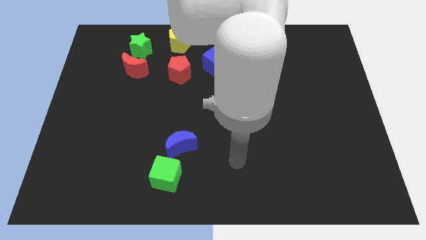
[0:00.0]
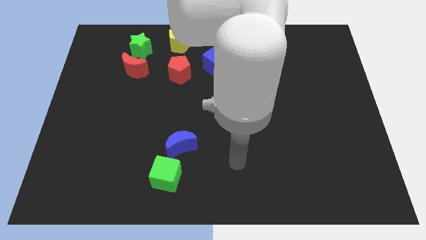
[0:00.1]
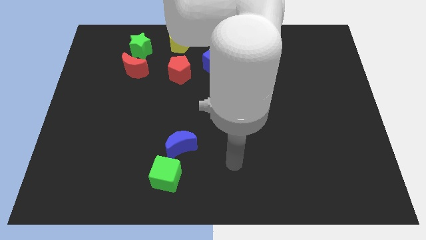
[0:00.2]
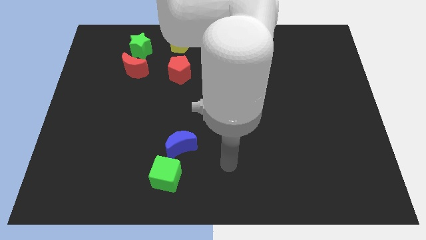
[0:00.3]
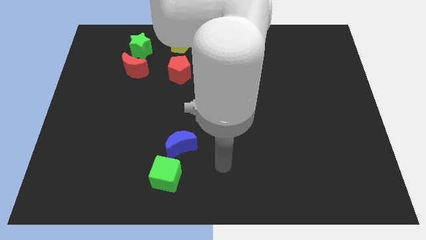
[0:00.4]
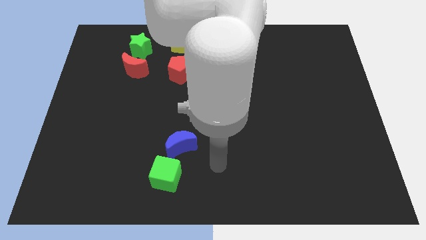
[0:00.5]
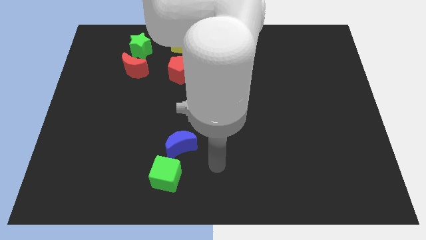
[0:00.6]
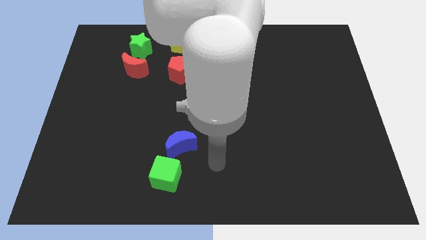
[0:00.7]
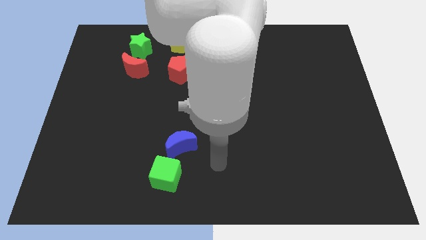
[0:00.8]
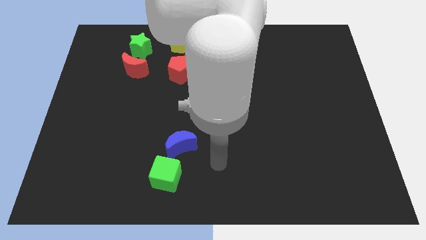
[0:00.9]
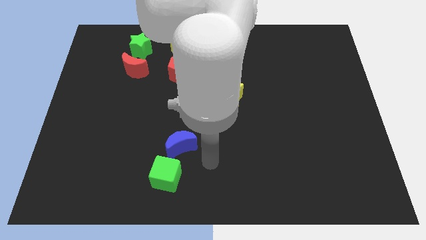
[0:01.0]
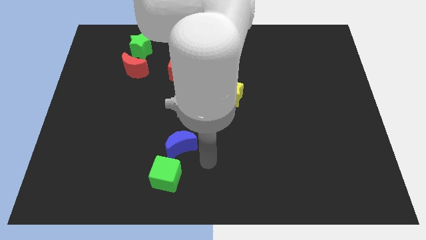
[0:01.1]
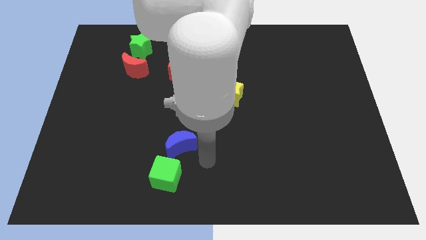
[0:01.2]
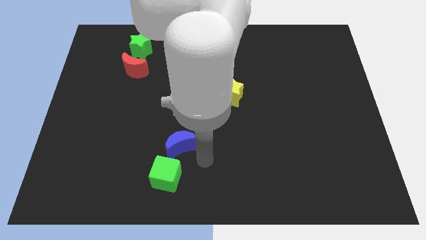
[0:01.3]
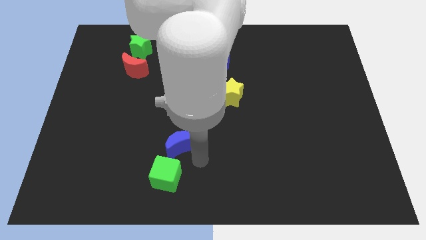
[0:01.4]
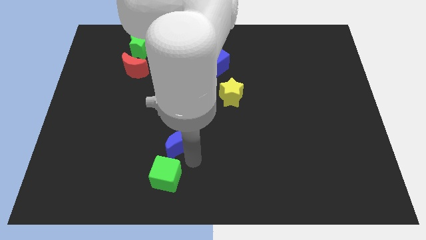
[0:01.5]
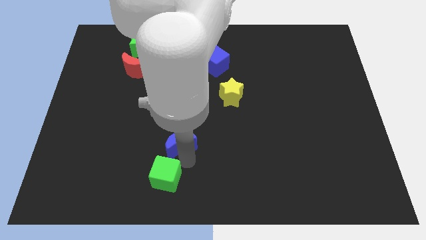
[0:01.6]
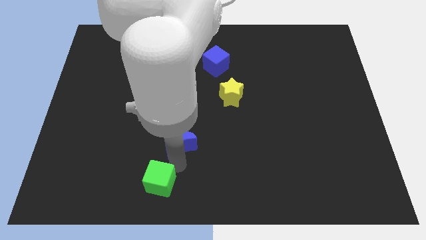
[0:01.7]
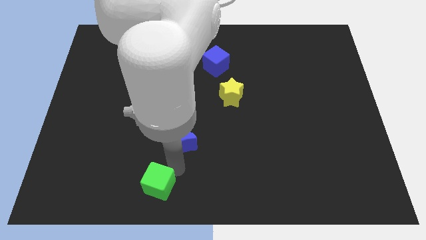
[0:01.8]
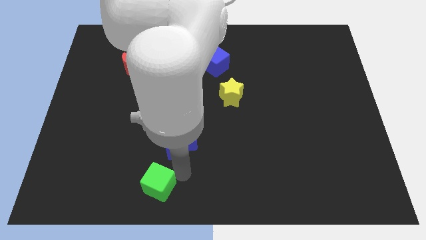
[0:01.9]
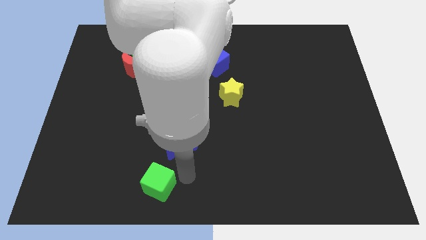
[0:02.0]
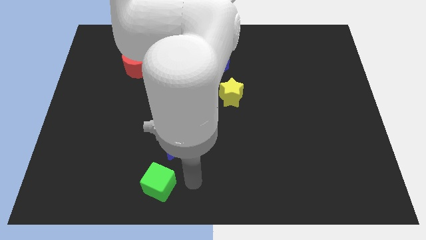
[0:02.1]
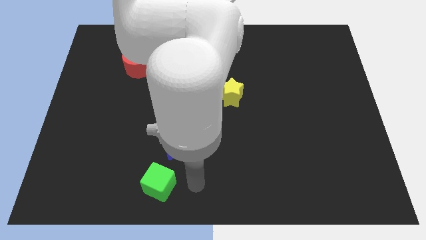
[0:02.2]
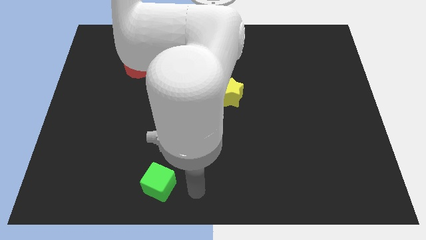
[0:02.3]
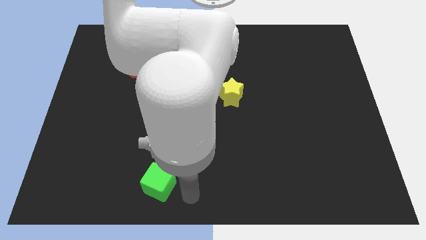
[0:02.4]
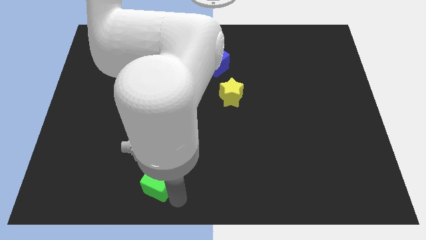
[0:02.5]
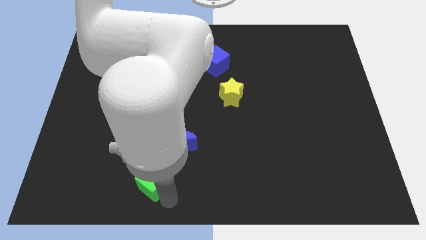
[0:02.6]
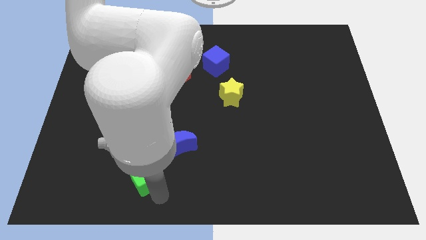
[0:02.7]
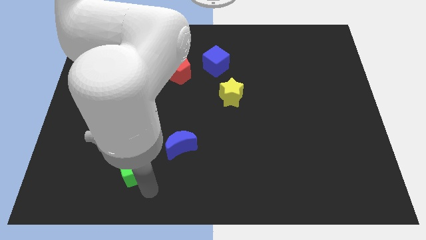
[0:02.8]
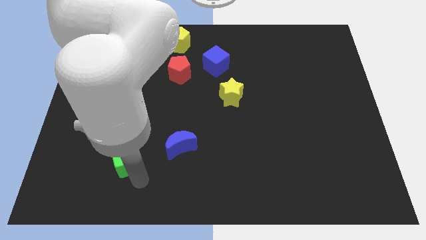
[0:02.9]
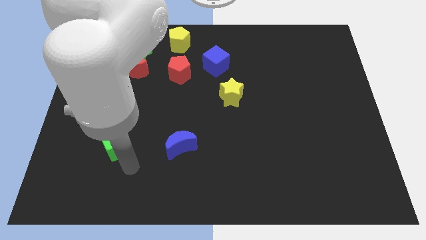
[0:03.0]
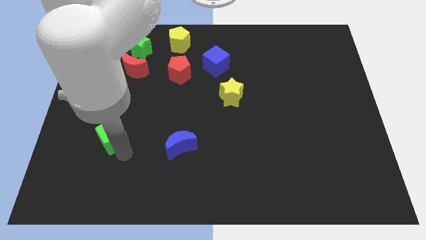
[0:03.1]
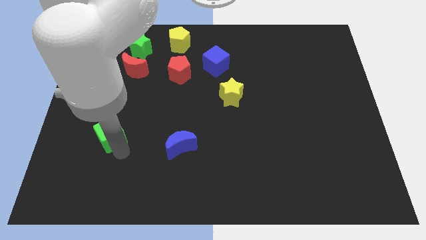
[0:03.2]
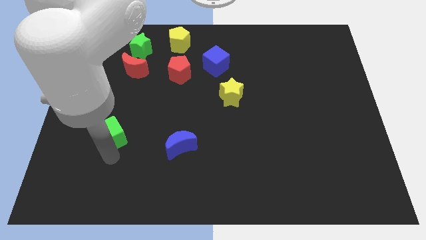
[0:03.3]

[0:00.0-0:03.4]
push the green cube away from the blue crescent

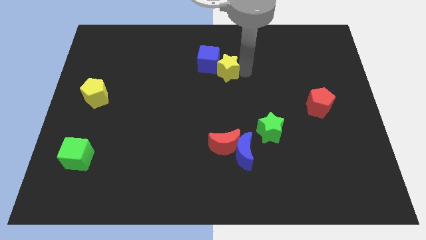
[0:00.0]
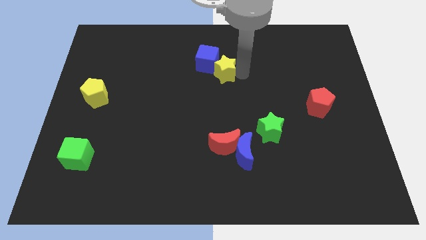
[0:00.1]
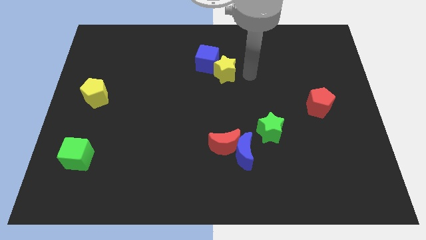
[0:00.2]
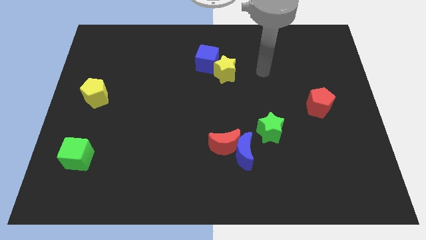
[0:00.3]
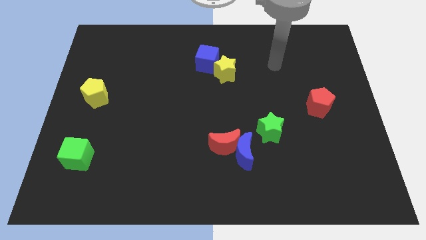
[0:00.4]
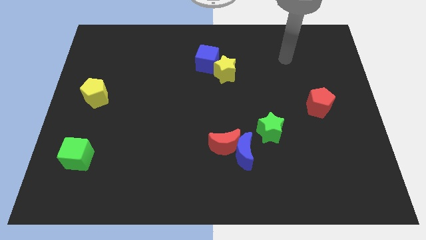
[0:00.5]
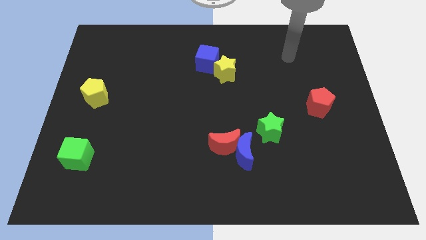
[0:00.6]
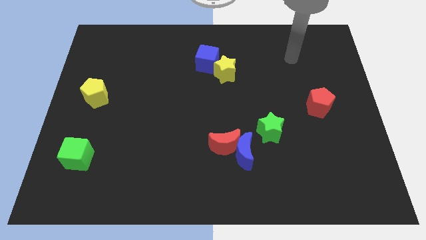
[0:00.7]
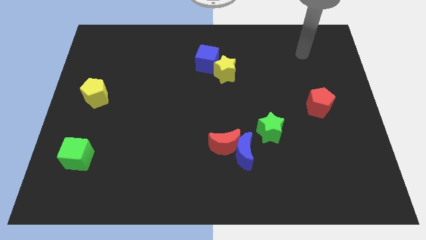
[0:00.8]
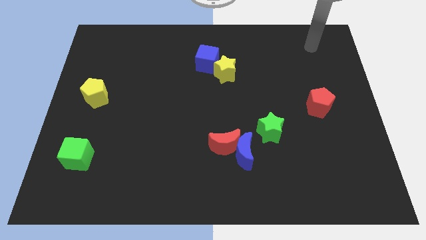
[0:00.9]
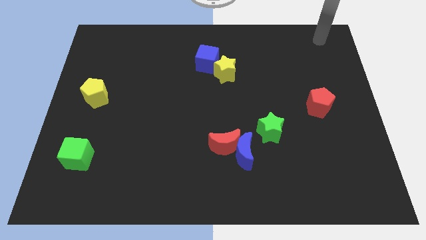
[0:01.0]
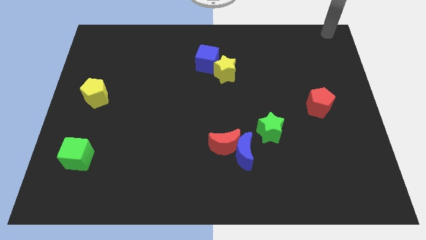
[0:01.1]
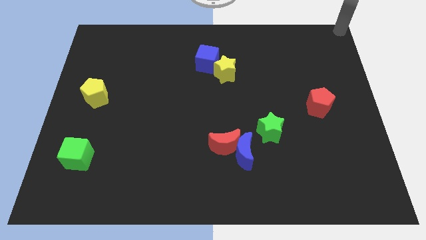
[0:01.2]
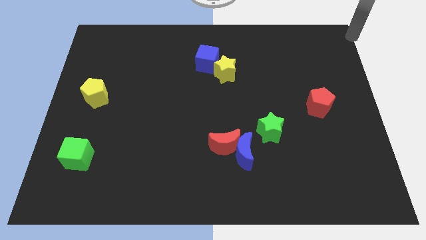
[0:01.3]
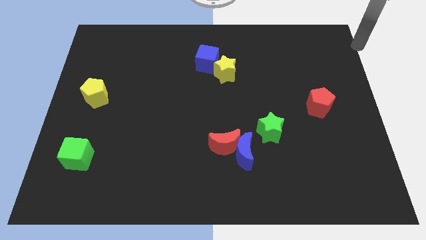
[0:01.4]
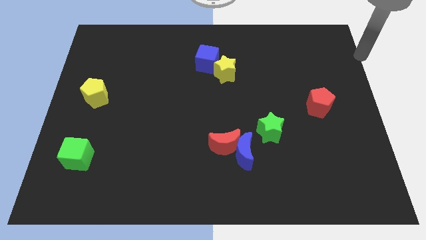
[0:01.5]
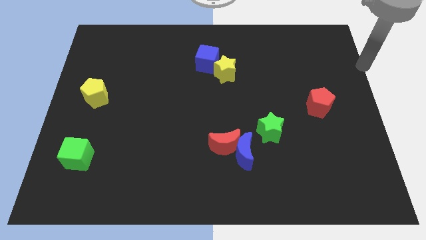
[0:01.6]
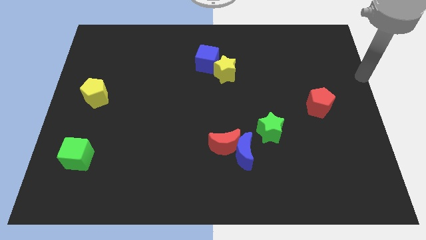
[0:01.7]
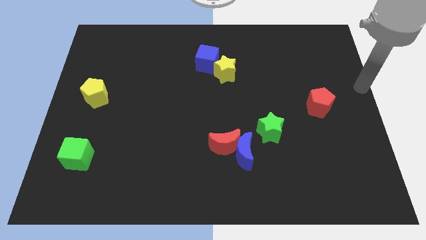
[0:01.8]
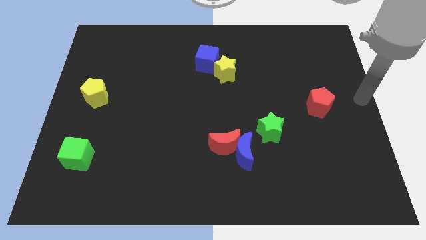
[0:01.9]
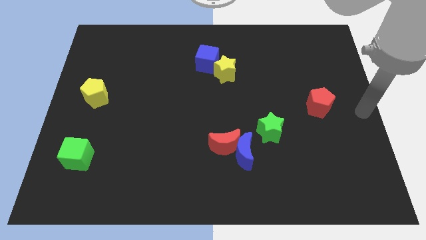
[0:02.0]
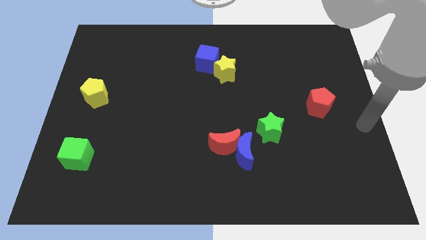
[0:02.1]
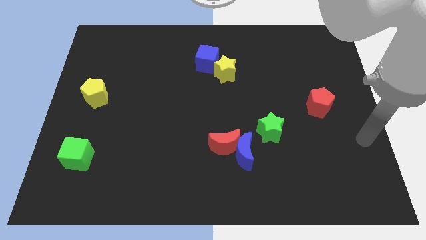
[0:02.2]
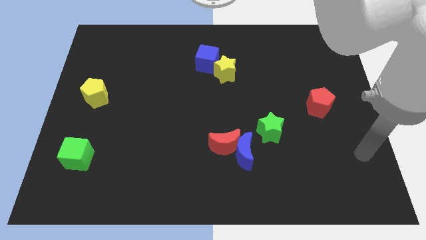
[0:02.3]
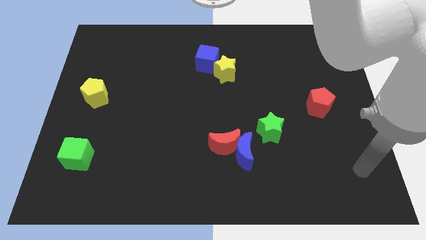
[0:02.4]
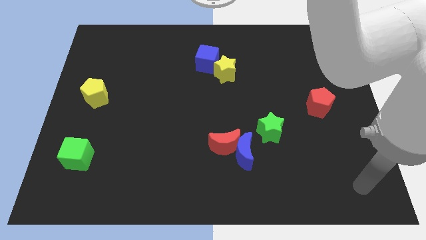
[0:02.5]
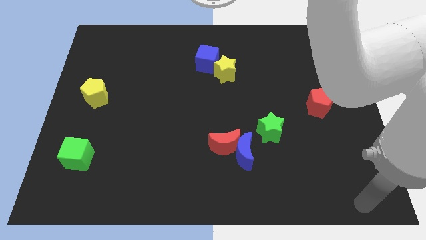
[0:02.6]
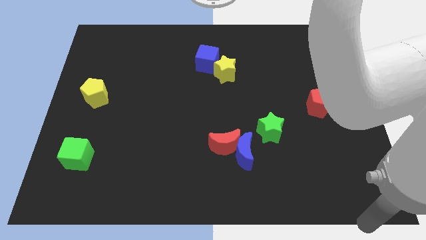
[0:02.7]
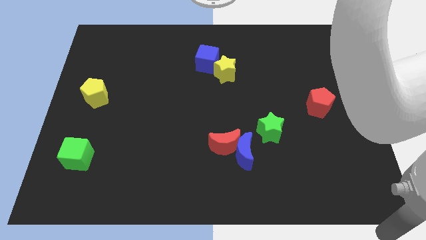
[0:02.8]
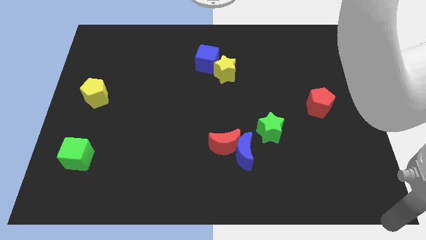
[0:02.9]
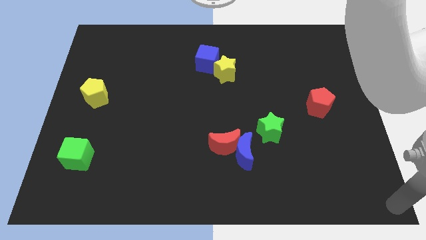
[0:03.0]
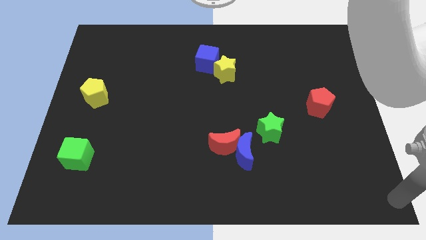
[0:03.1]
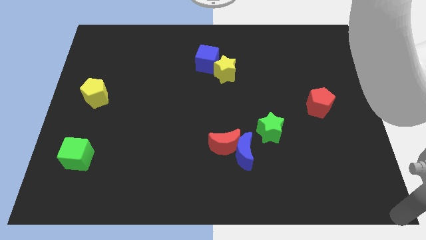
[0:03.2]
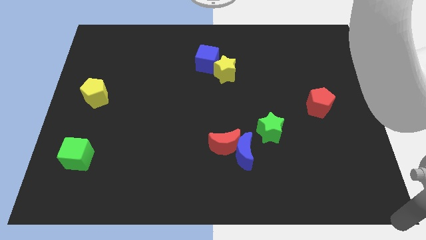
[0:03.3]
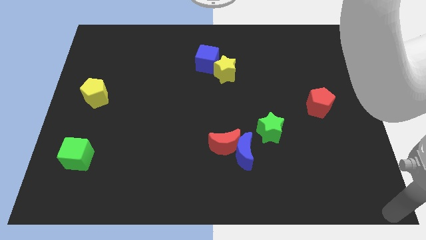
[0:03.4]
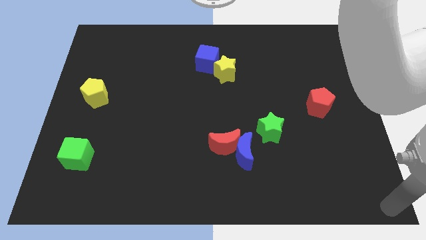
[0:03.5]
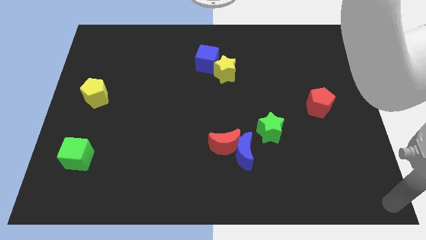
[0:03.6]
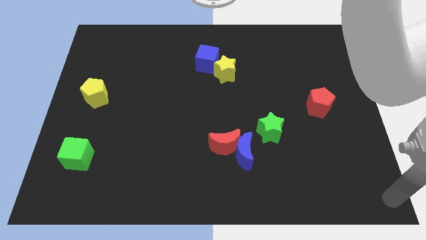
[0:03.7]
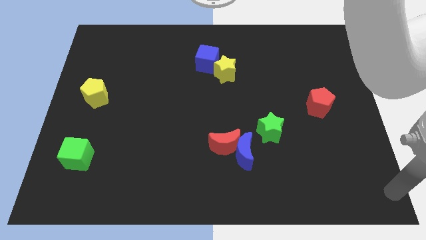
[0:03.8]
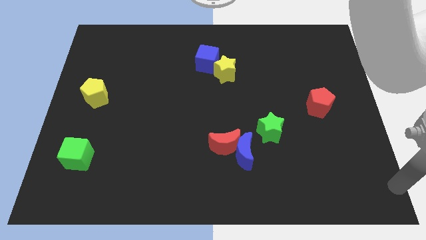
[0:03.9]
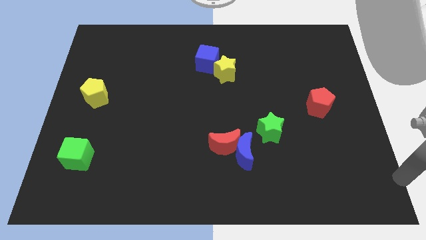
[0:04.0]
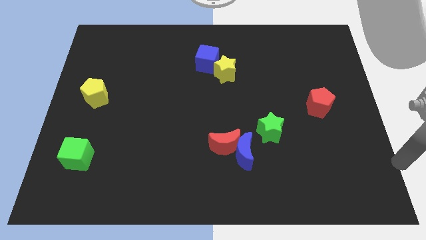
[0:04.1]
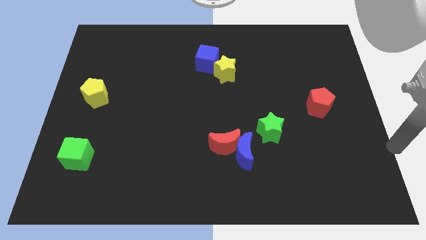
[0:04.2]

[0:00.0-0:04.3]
move the arm away from the yellow star

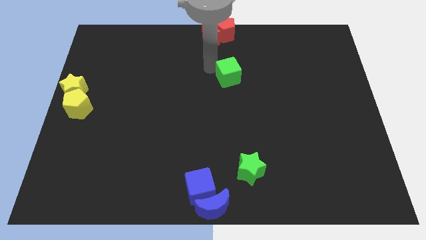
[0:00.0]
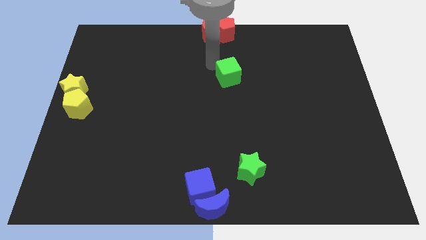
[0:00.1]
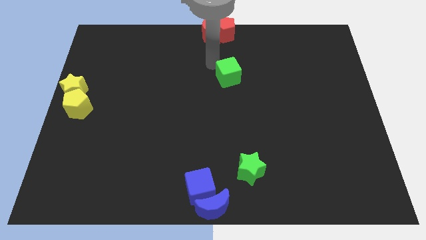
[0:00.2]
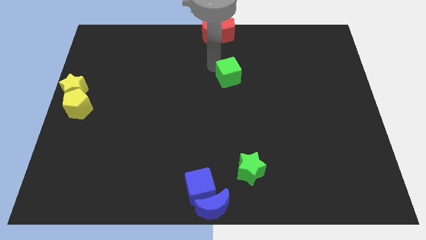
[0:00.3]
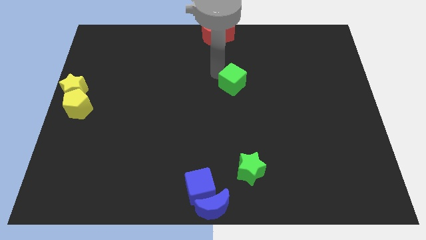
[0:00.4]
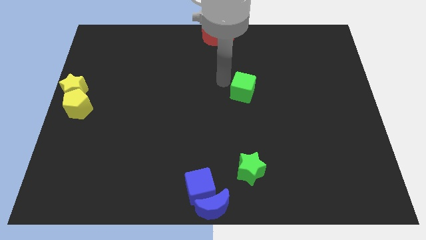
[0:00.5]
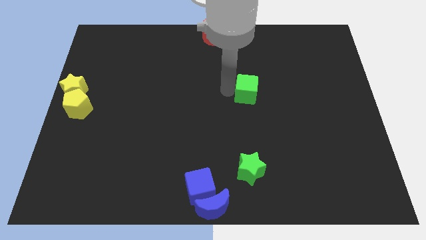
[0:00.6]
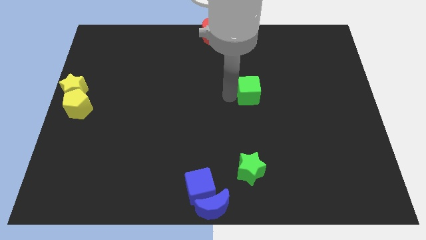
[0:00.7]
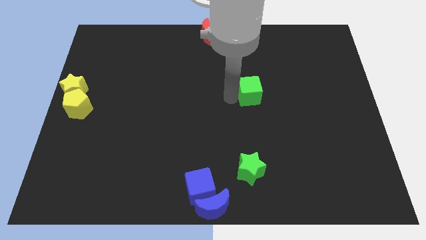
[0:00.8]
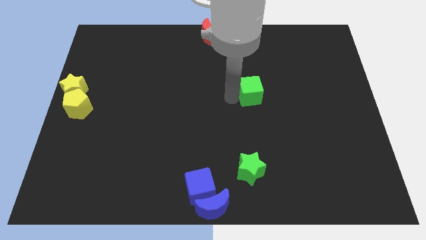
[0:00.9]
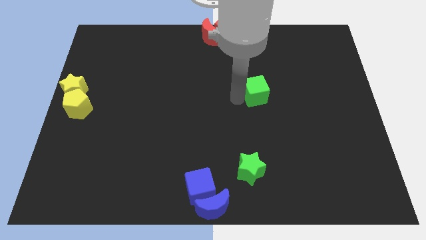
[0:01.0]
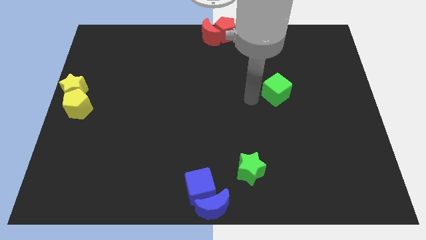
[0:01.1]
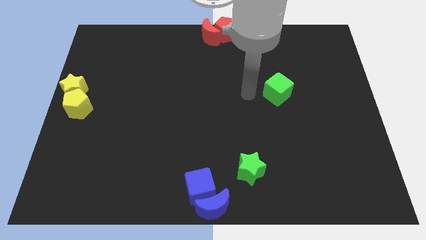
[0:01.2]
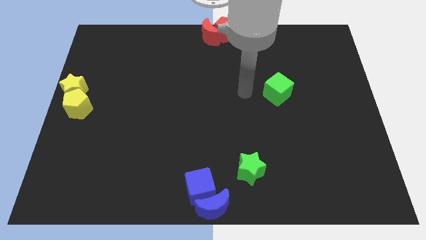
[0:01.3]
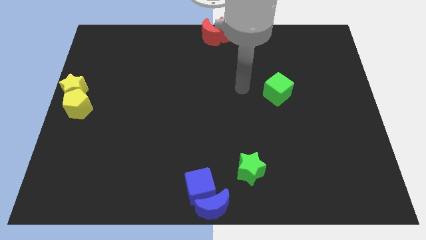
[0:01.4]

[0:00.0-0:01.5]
move the green cube parallel to the group of yellow blocks
